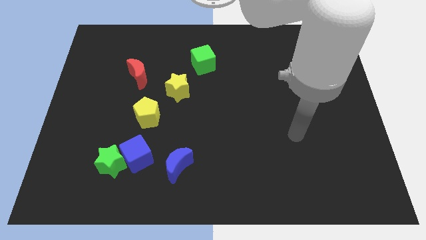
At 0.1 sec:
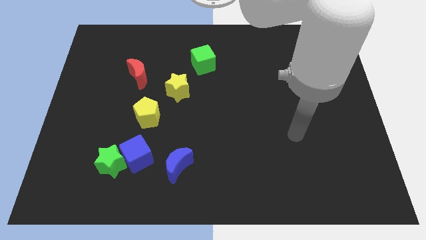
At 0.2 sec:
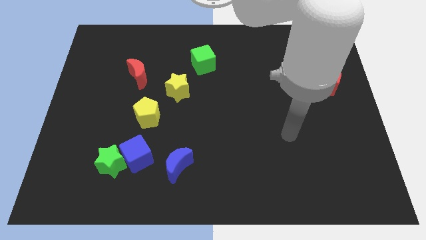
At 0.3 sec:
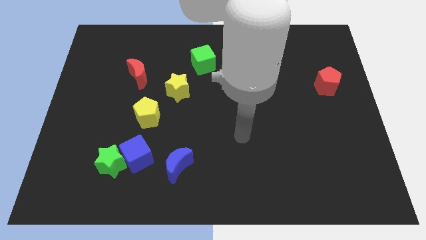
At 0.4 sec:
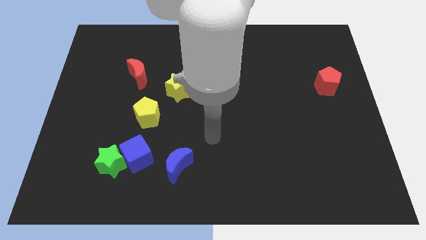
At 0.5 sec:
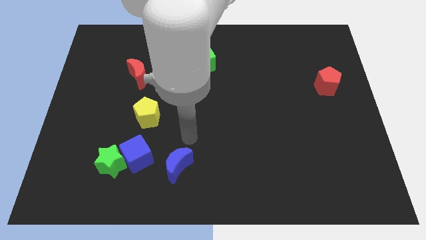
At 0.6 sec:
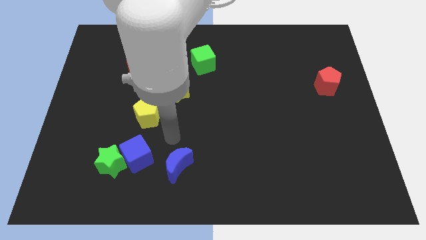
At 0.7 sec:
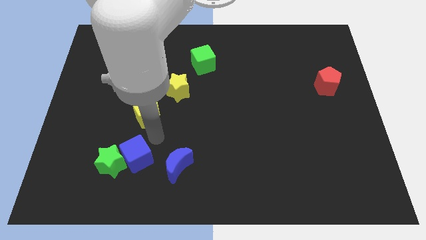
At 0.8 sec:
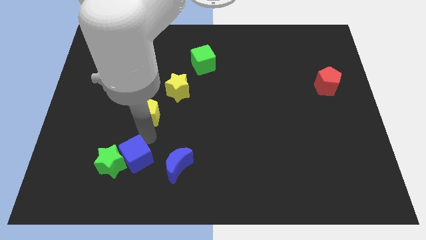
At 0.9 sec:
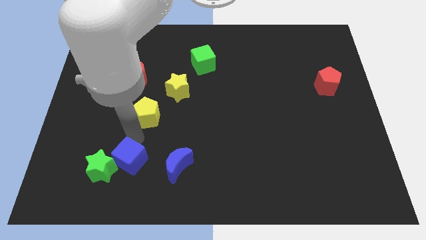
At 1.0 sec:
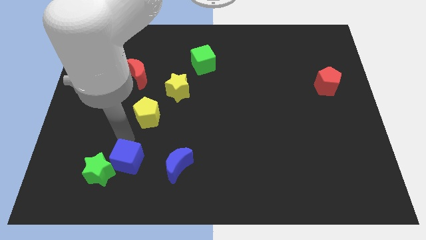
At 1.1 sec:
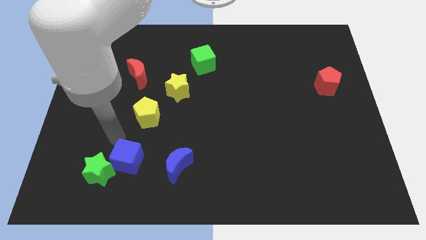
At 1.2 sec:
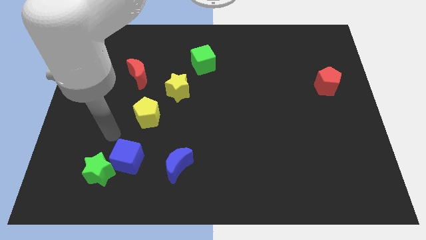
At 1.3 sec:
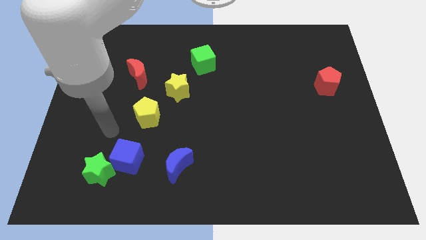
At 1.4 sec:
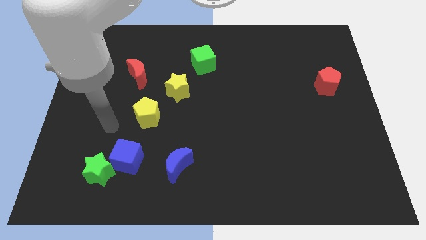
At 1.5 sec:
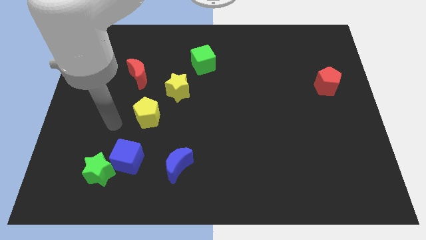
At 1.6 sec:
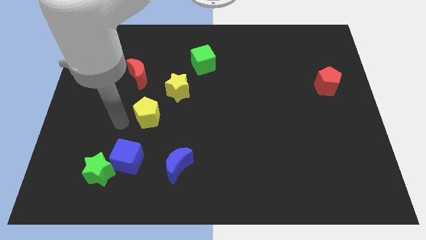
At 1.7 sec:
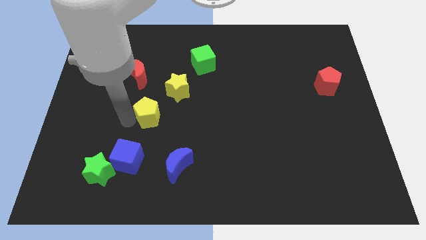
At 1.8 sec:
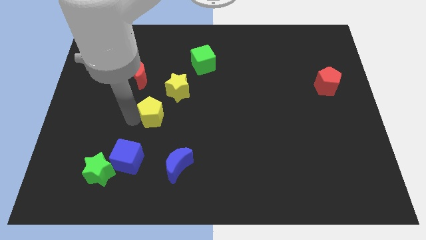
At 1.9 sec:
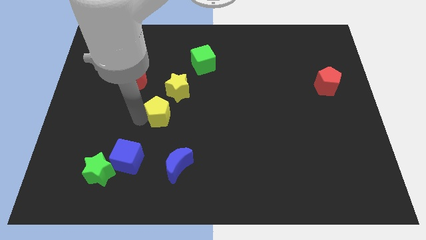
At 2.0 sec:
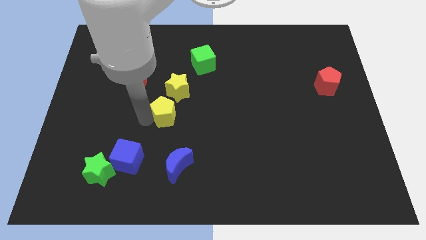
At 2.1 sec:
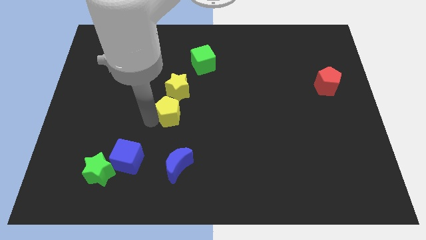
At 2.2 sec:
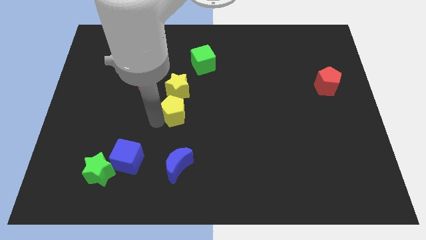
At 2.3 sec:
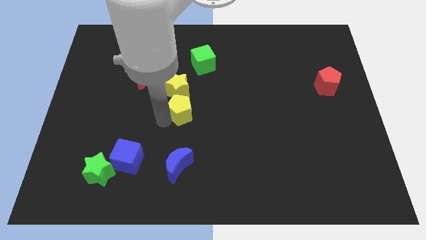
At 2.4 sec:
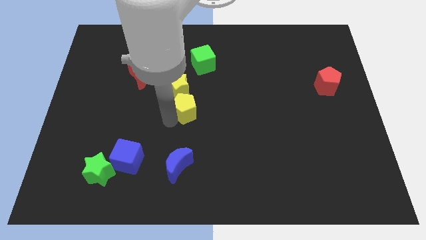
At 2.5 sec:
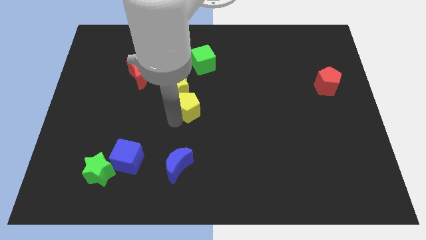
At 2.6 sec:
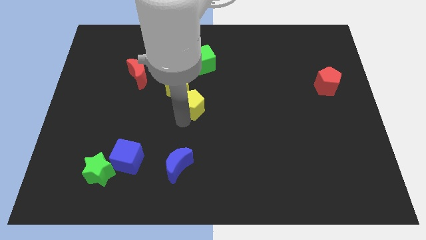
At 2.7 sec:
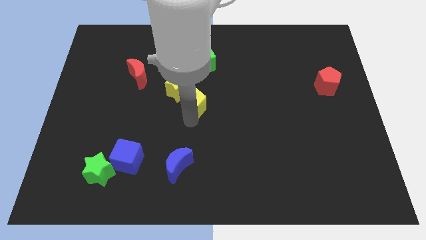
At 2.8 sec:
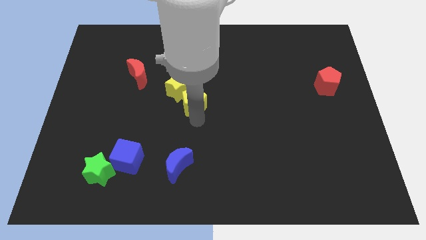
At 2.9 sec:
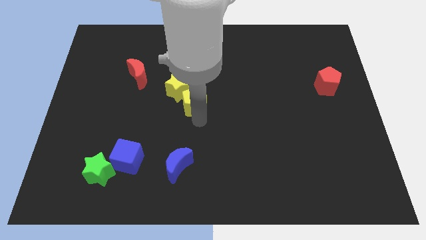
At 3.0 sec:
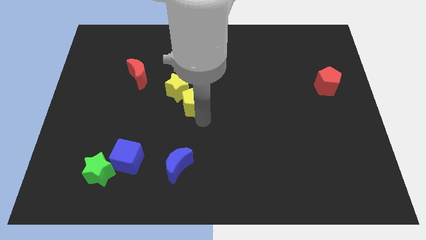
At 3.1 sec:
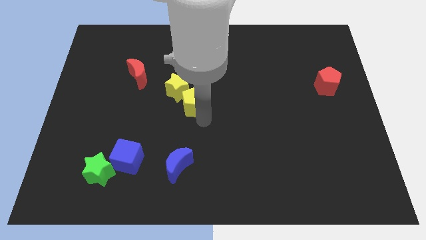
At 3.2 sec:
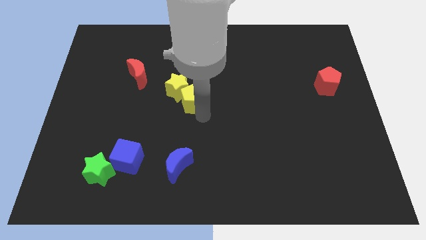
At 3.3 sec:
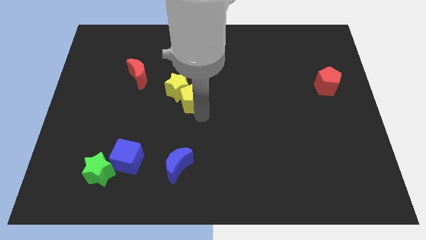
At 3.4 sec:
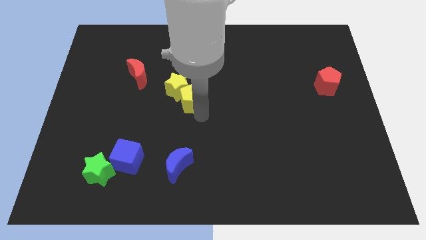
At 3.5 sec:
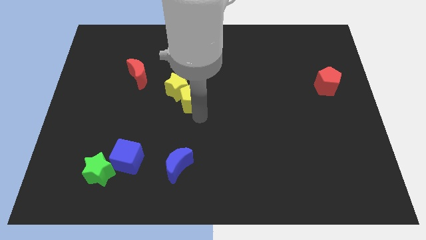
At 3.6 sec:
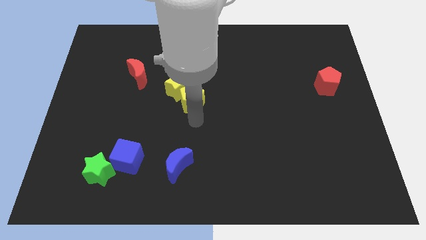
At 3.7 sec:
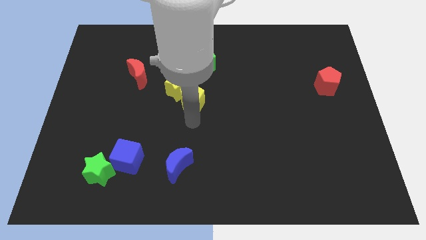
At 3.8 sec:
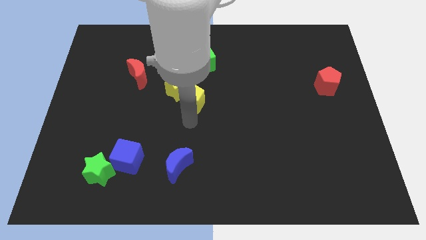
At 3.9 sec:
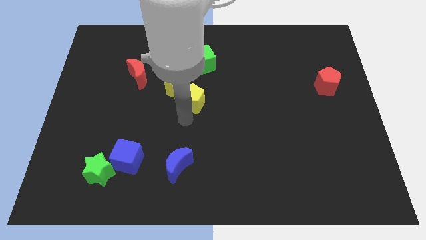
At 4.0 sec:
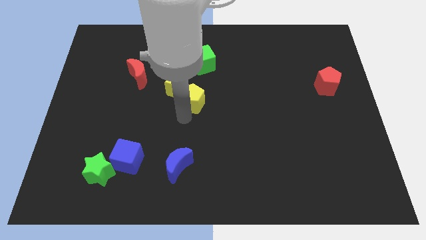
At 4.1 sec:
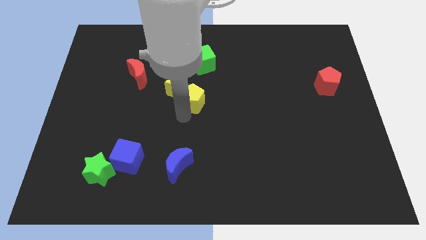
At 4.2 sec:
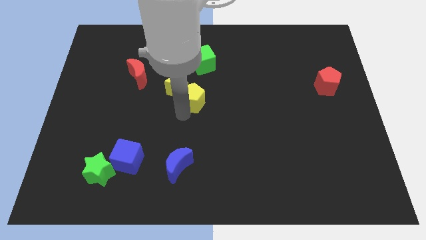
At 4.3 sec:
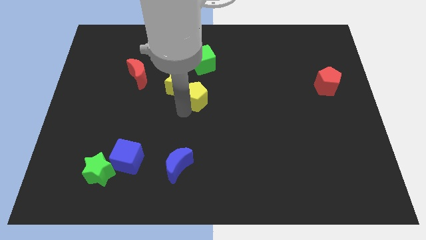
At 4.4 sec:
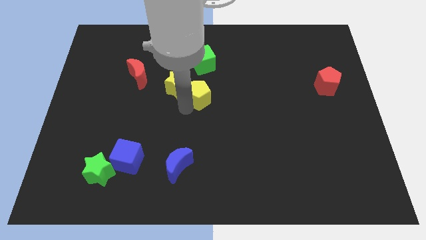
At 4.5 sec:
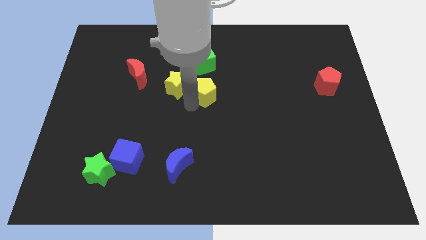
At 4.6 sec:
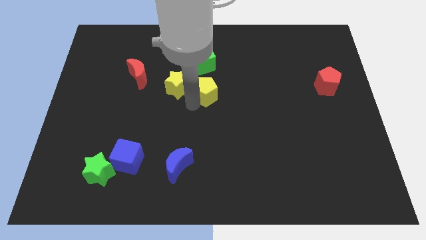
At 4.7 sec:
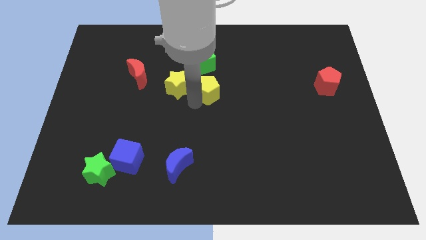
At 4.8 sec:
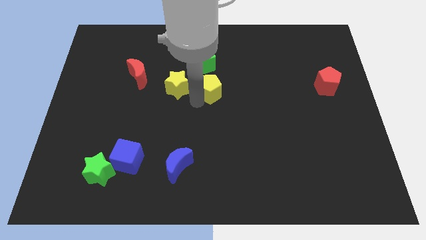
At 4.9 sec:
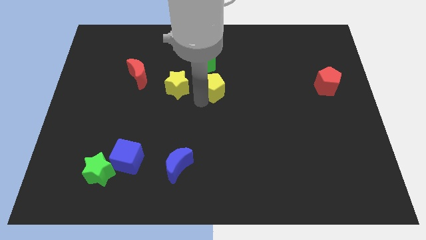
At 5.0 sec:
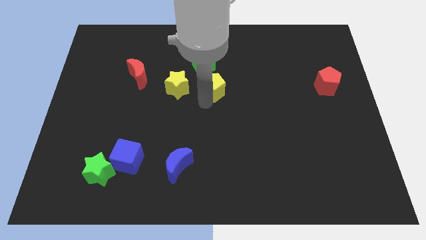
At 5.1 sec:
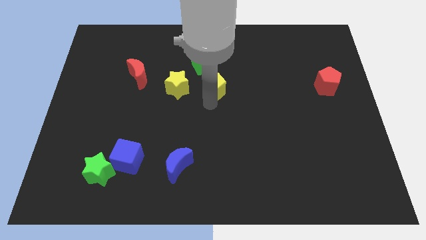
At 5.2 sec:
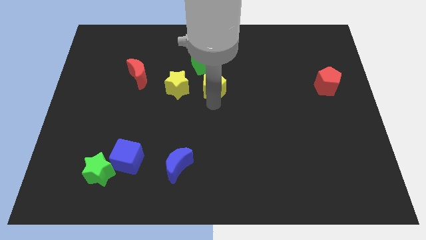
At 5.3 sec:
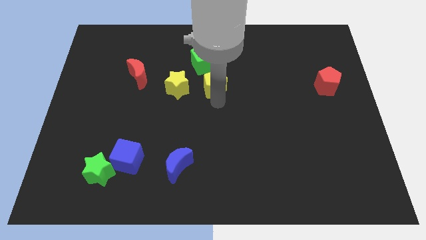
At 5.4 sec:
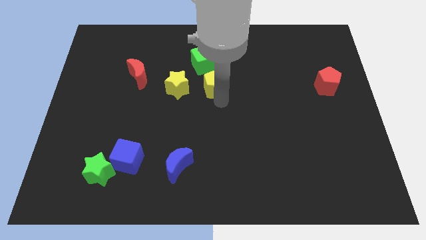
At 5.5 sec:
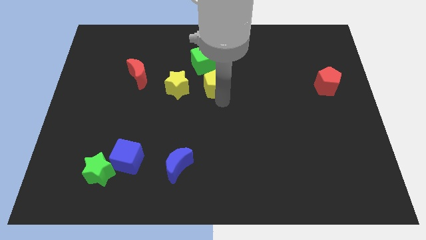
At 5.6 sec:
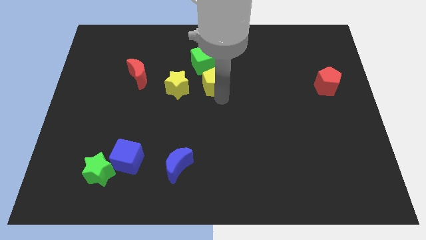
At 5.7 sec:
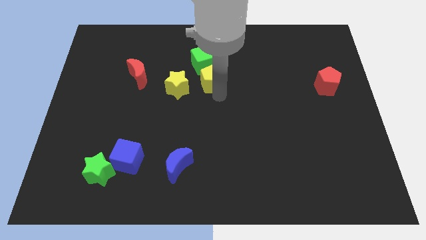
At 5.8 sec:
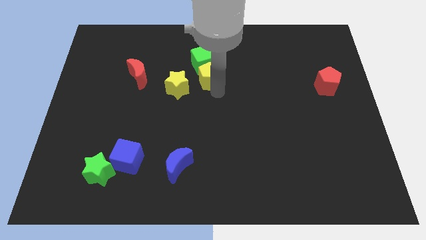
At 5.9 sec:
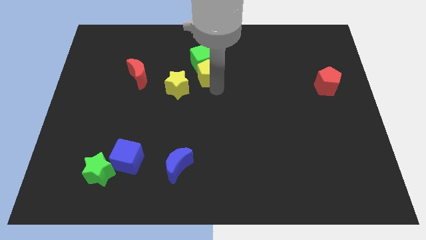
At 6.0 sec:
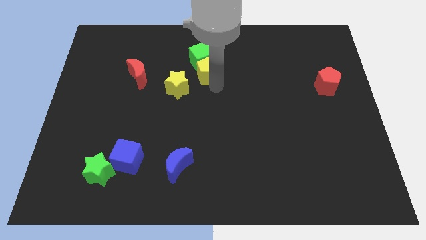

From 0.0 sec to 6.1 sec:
move the yellow pentagon next to the green cube

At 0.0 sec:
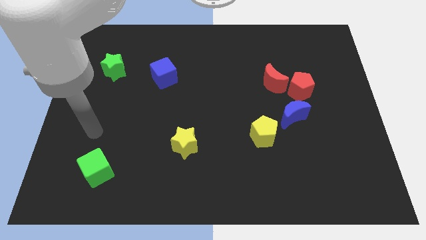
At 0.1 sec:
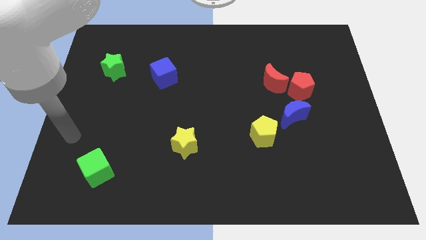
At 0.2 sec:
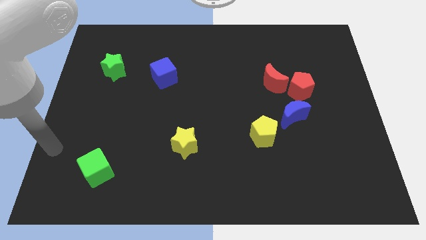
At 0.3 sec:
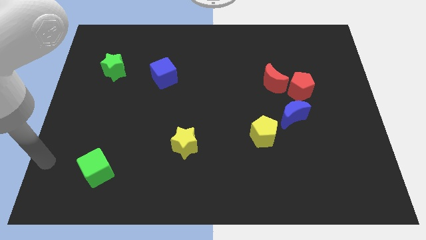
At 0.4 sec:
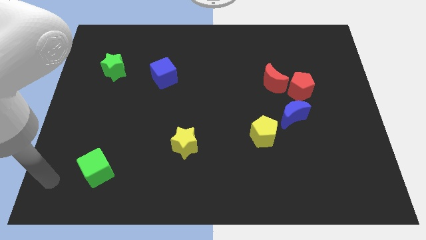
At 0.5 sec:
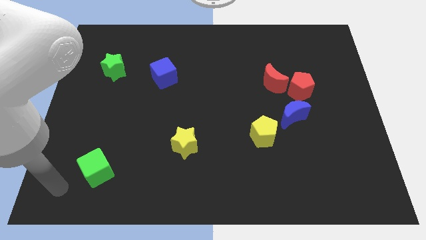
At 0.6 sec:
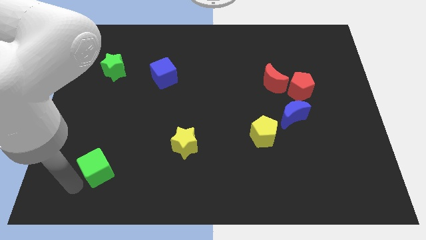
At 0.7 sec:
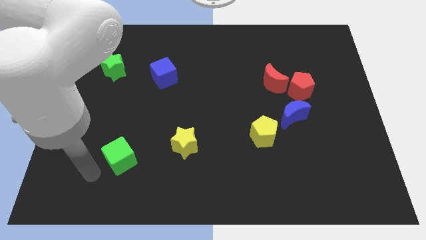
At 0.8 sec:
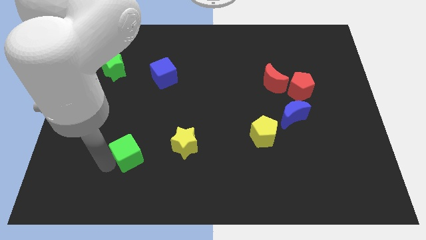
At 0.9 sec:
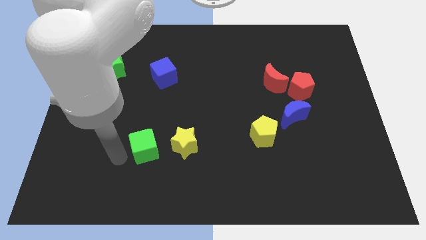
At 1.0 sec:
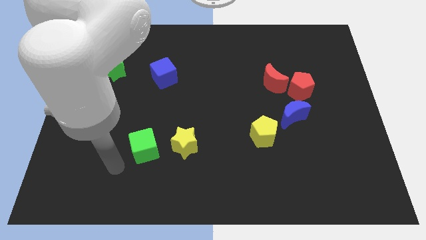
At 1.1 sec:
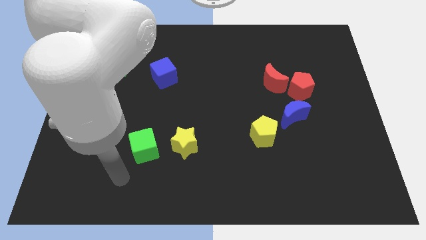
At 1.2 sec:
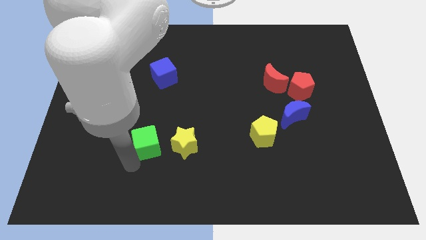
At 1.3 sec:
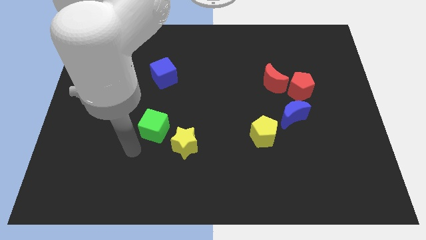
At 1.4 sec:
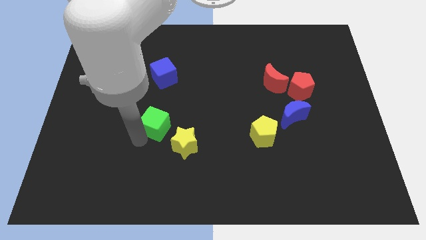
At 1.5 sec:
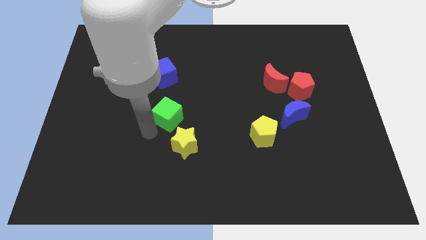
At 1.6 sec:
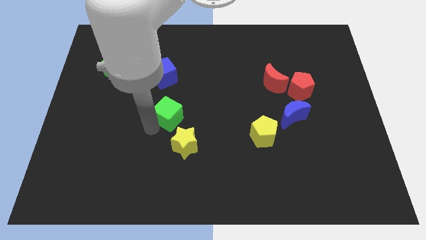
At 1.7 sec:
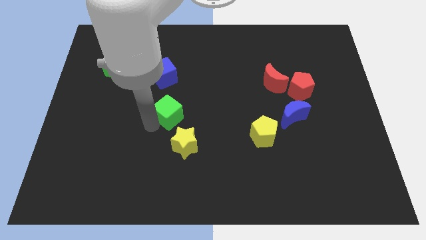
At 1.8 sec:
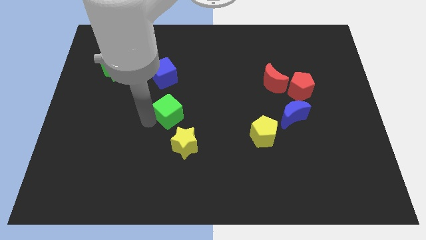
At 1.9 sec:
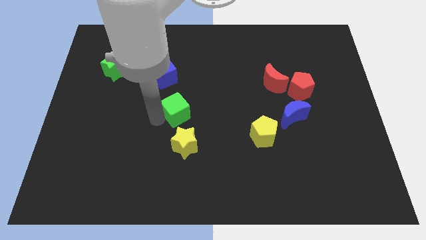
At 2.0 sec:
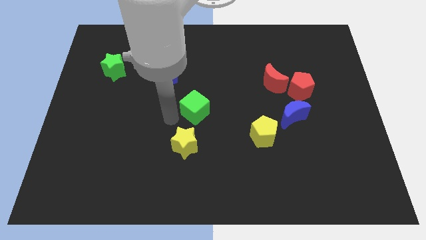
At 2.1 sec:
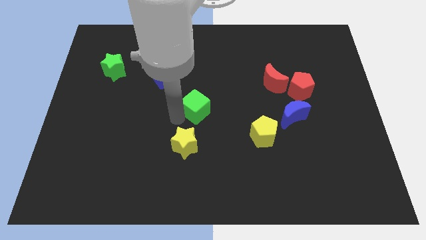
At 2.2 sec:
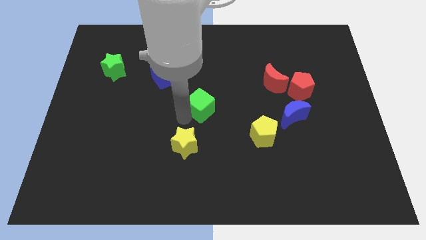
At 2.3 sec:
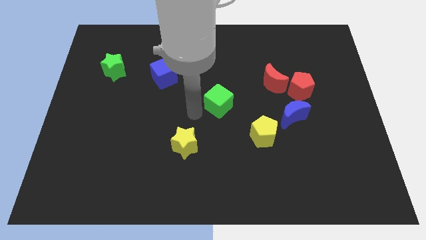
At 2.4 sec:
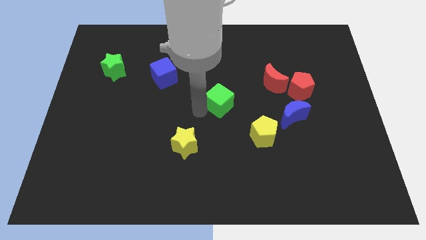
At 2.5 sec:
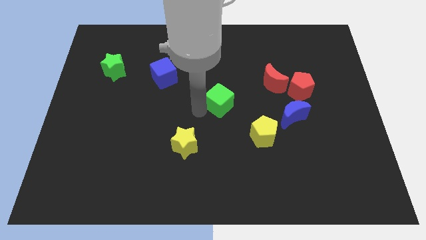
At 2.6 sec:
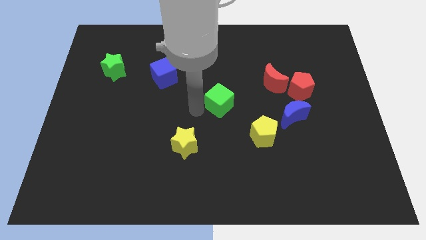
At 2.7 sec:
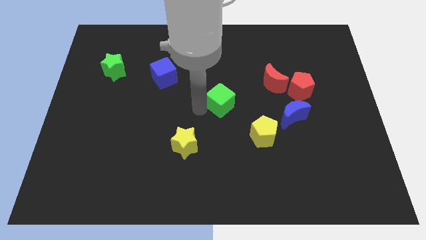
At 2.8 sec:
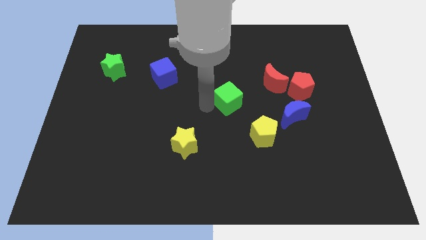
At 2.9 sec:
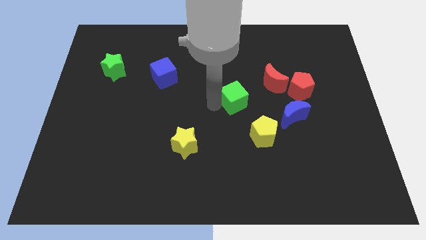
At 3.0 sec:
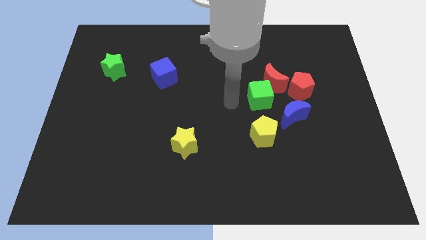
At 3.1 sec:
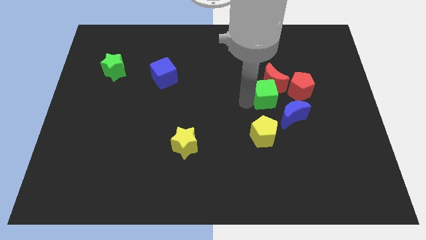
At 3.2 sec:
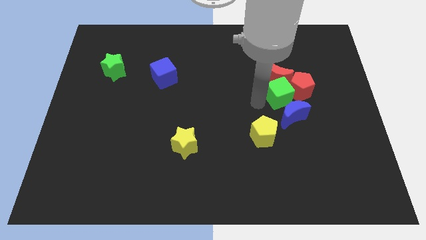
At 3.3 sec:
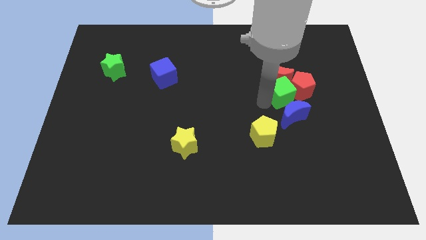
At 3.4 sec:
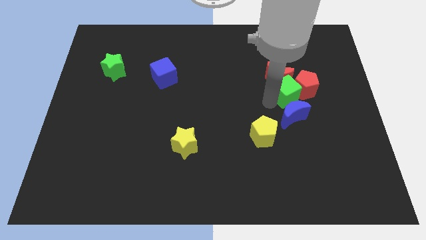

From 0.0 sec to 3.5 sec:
push the green cube towards the red pentagon
